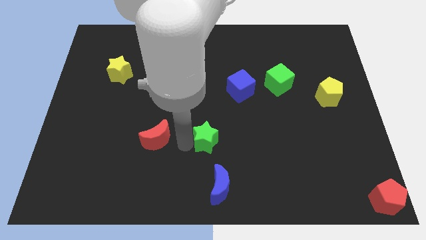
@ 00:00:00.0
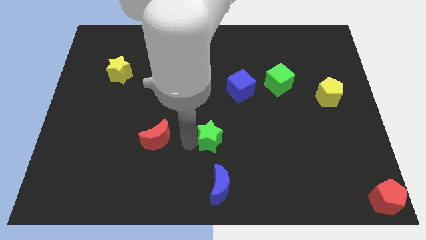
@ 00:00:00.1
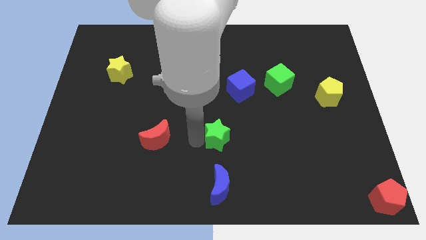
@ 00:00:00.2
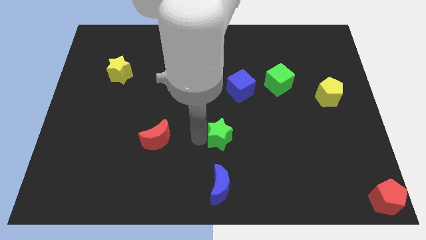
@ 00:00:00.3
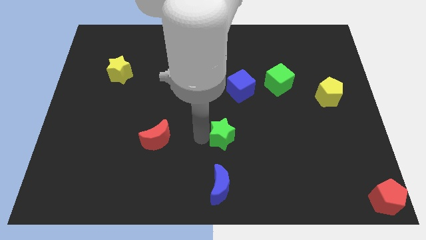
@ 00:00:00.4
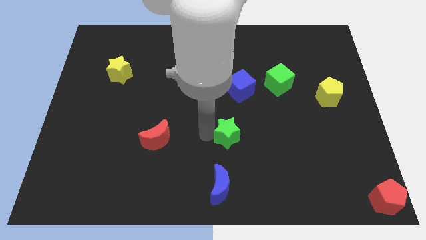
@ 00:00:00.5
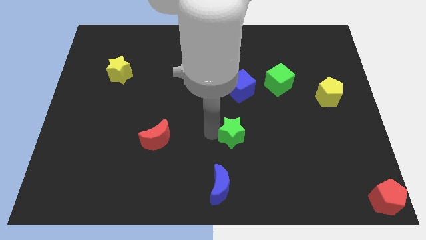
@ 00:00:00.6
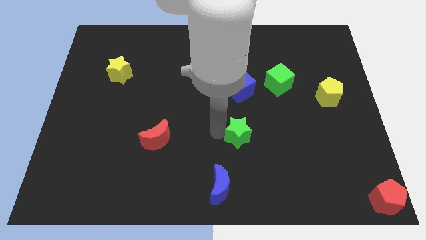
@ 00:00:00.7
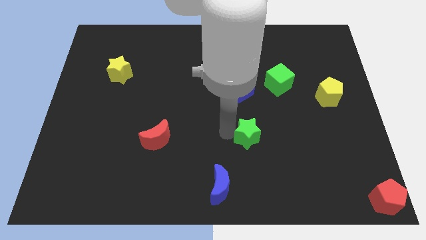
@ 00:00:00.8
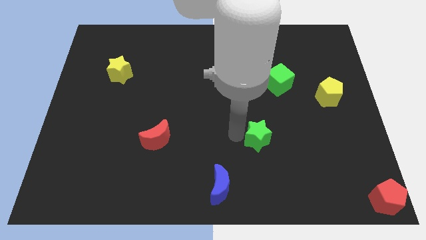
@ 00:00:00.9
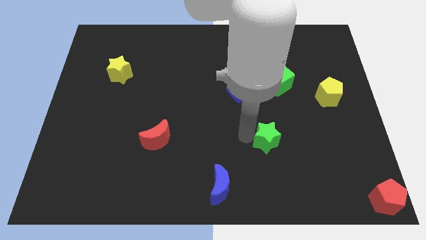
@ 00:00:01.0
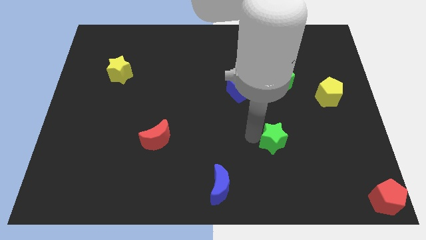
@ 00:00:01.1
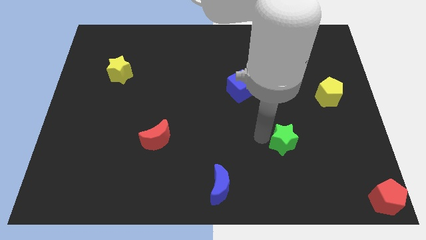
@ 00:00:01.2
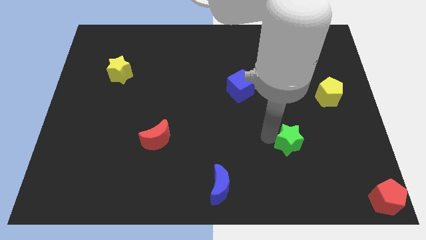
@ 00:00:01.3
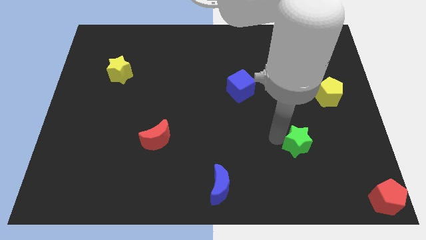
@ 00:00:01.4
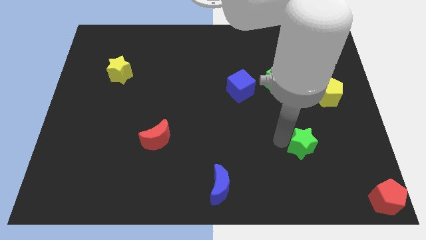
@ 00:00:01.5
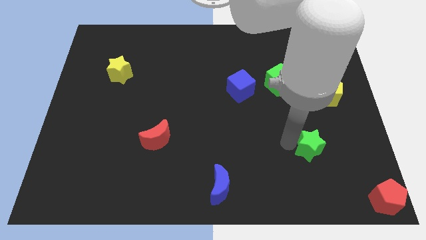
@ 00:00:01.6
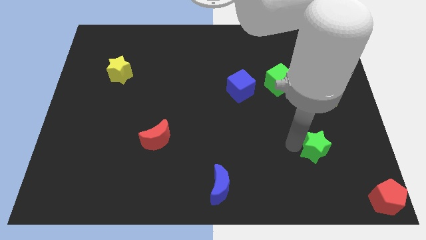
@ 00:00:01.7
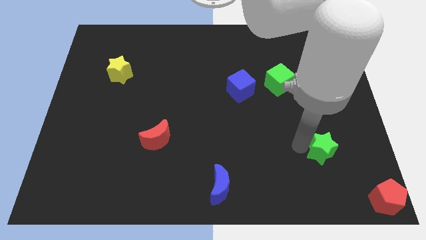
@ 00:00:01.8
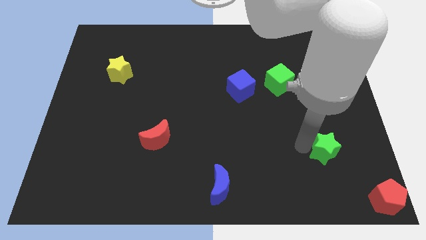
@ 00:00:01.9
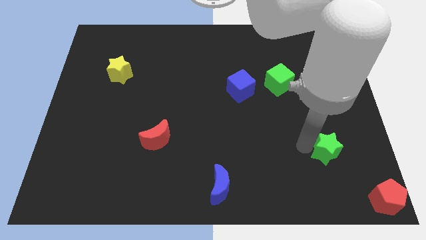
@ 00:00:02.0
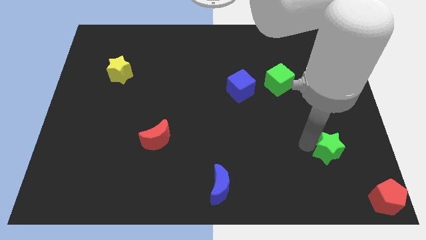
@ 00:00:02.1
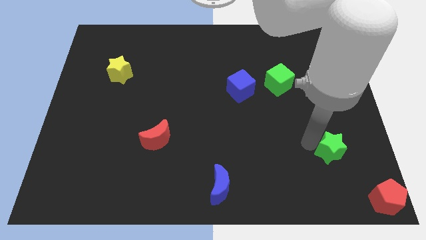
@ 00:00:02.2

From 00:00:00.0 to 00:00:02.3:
move the green star diagonal above red pentagon

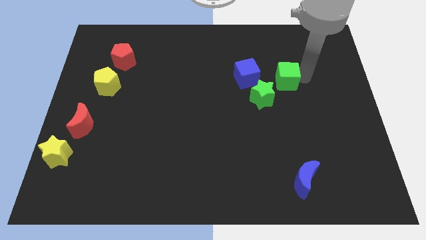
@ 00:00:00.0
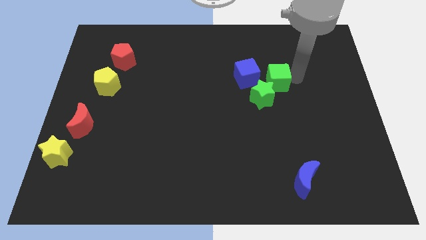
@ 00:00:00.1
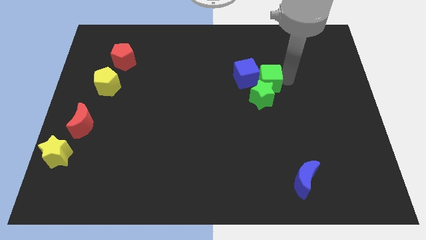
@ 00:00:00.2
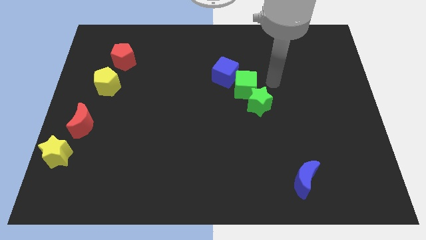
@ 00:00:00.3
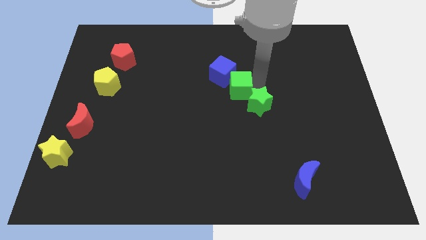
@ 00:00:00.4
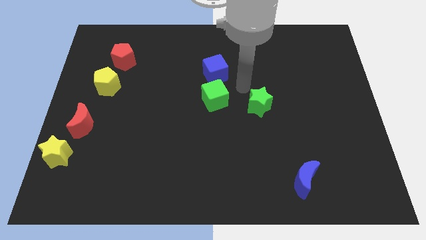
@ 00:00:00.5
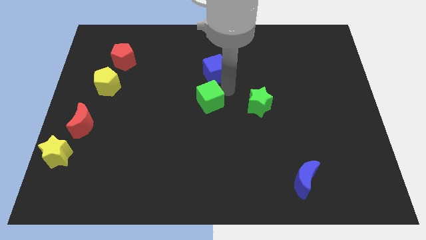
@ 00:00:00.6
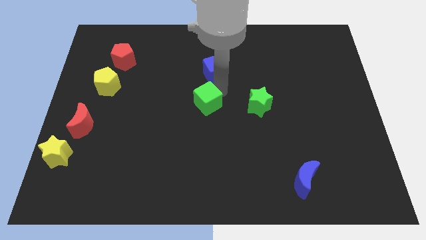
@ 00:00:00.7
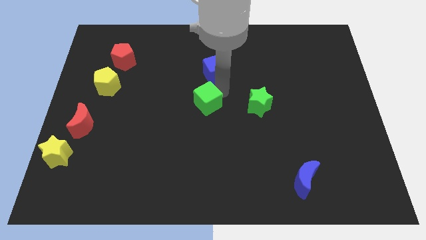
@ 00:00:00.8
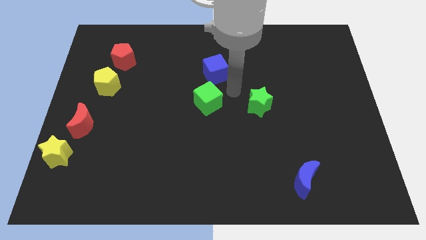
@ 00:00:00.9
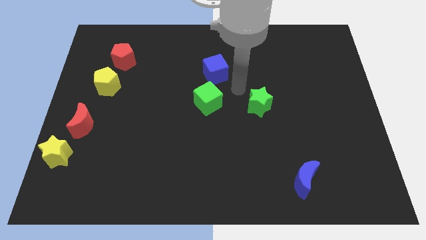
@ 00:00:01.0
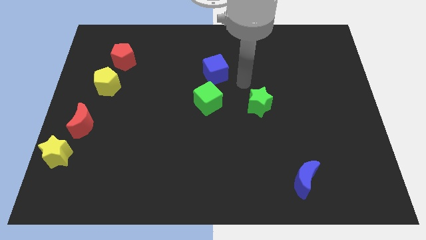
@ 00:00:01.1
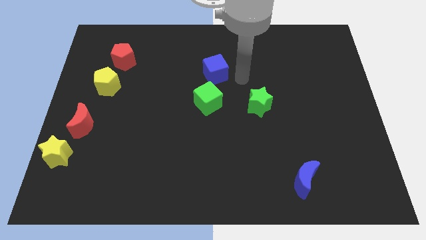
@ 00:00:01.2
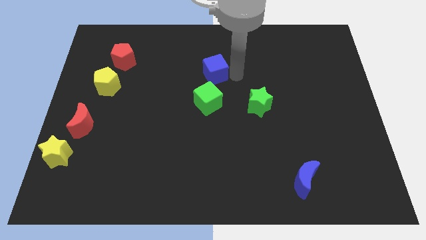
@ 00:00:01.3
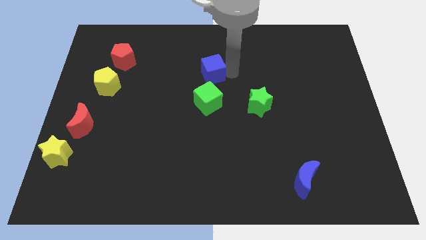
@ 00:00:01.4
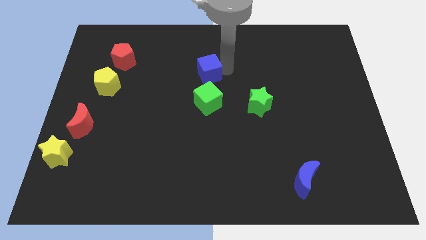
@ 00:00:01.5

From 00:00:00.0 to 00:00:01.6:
put the green cube and blue cube vertically at the center of the table

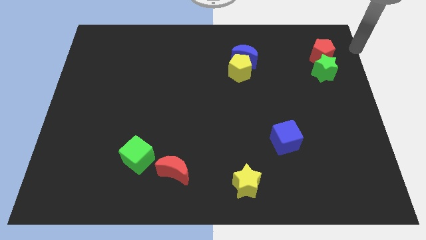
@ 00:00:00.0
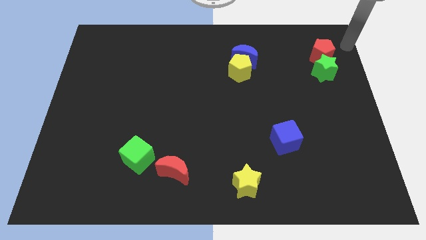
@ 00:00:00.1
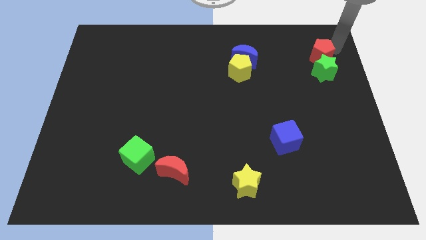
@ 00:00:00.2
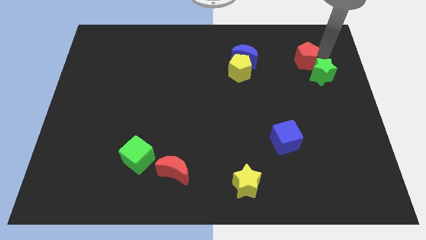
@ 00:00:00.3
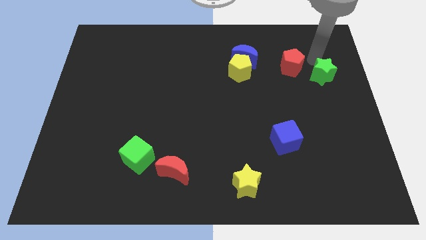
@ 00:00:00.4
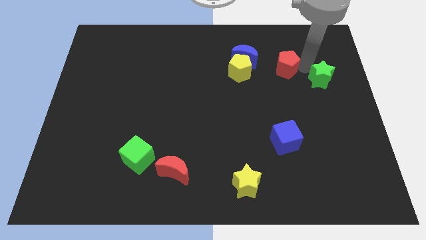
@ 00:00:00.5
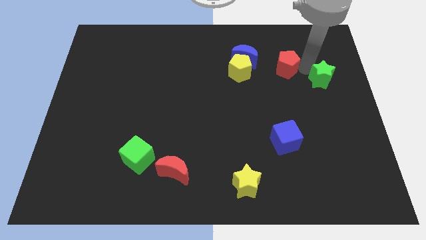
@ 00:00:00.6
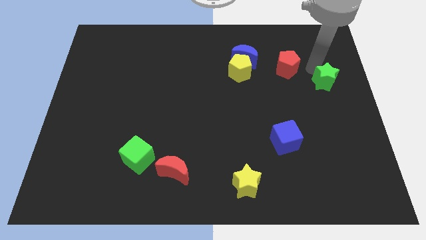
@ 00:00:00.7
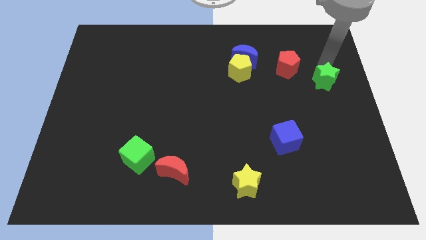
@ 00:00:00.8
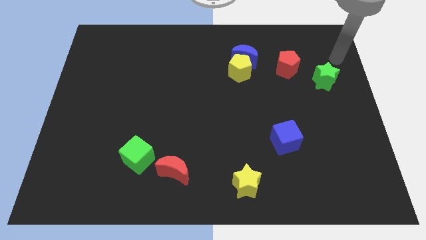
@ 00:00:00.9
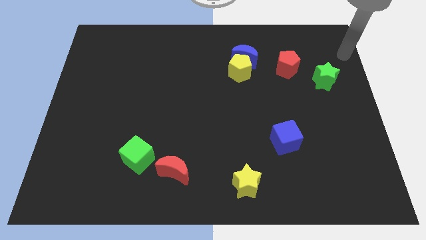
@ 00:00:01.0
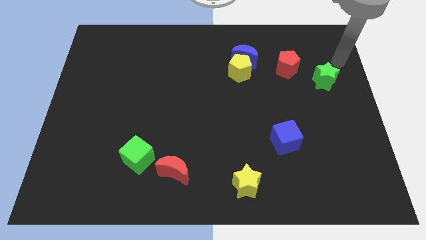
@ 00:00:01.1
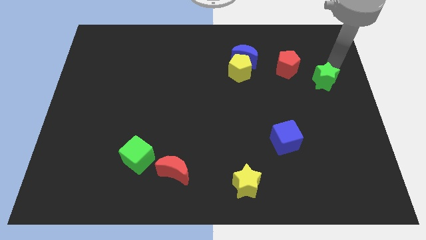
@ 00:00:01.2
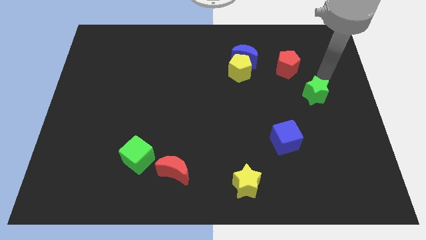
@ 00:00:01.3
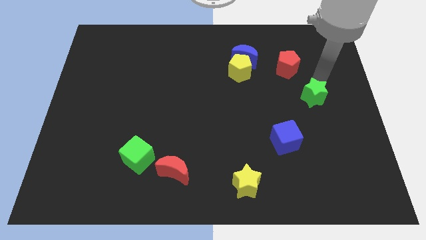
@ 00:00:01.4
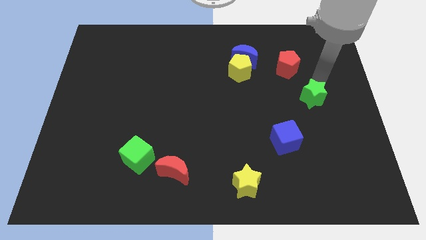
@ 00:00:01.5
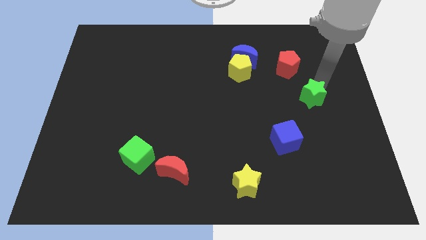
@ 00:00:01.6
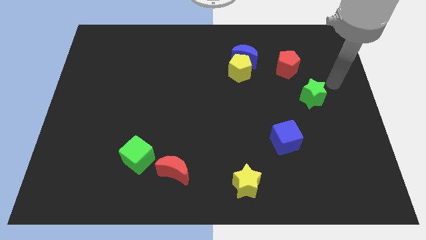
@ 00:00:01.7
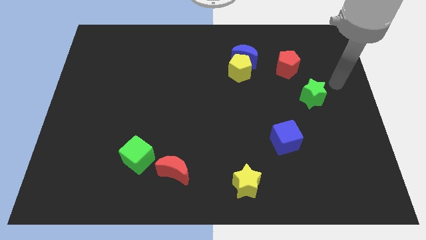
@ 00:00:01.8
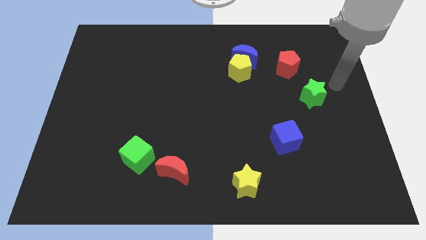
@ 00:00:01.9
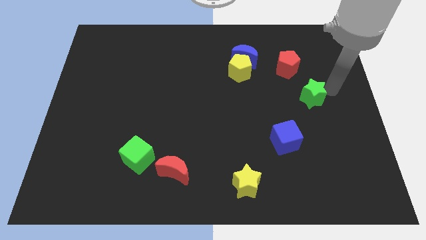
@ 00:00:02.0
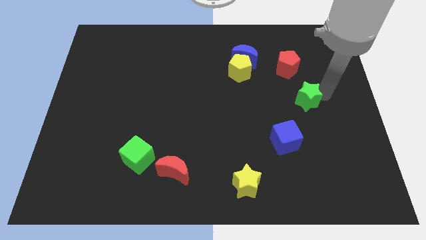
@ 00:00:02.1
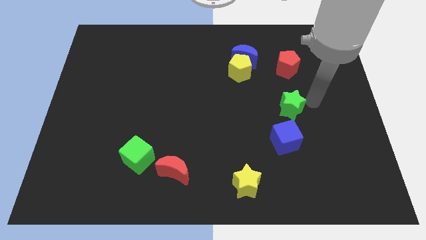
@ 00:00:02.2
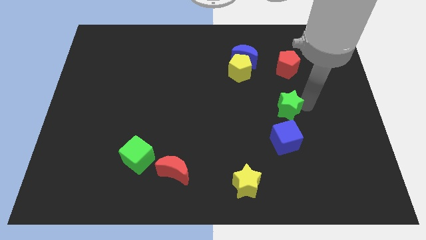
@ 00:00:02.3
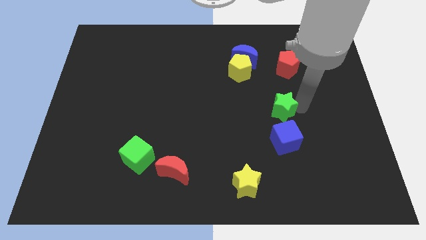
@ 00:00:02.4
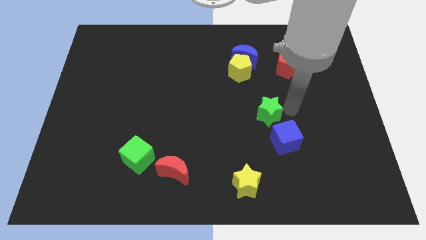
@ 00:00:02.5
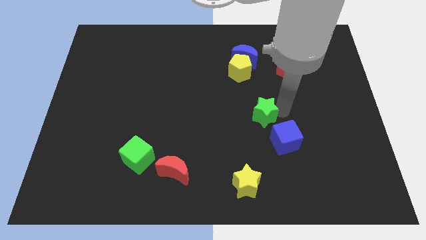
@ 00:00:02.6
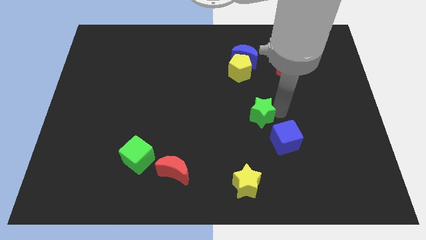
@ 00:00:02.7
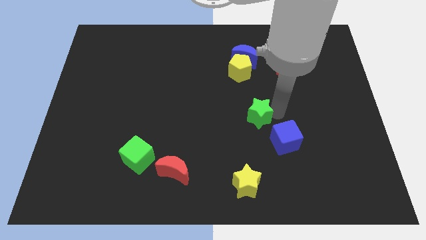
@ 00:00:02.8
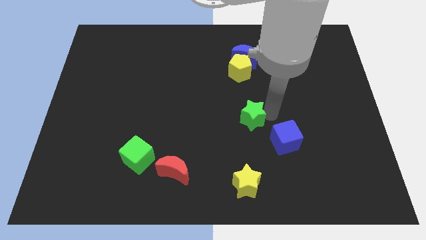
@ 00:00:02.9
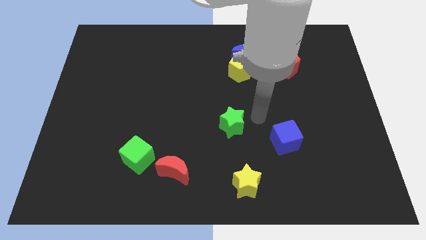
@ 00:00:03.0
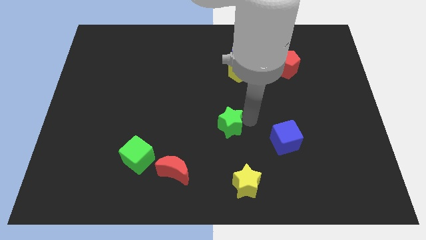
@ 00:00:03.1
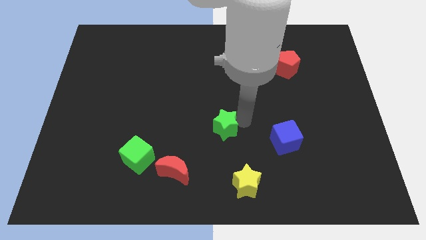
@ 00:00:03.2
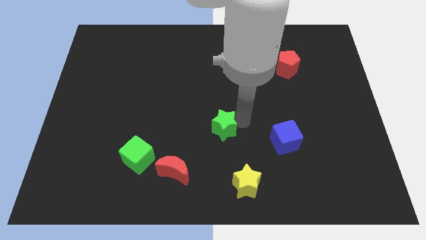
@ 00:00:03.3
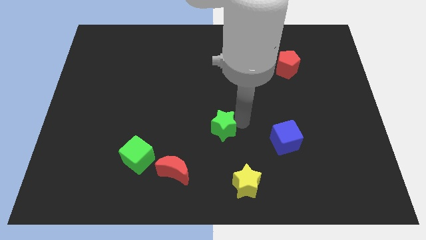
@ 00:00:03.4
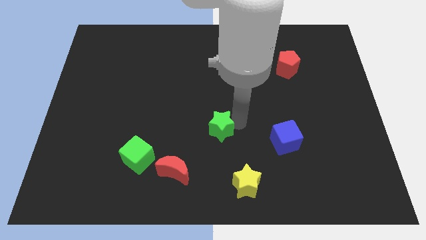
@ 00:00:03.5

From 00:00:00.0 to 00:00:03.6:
move the green star to the left of the blue cube

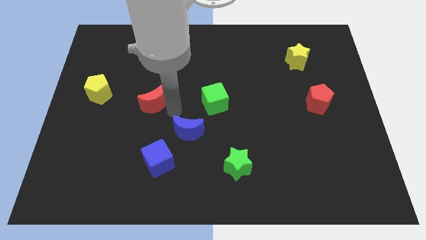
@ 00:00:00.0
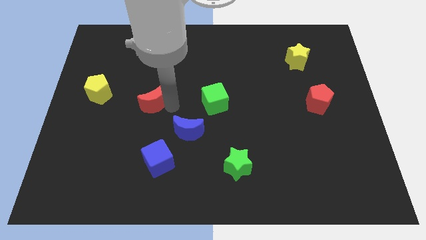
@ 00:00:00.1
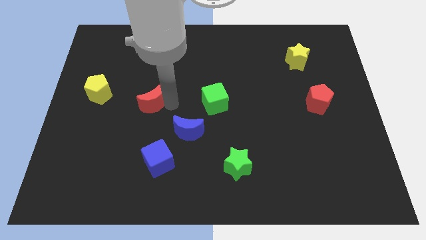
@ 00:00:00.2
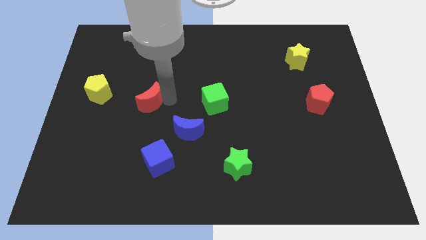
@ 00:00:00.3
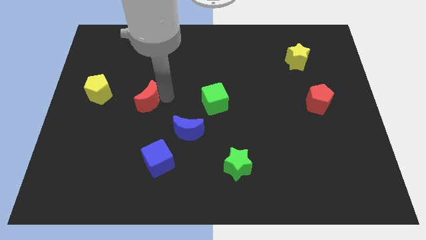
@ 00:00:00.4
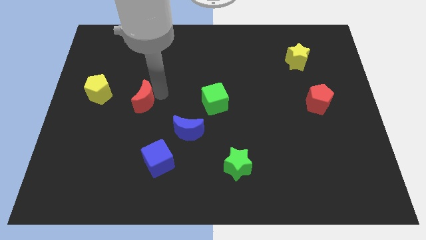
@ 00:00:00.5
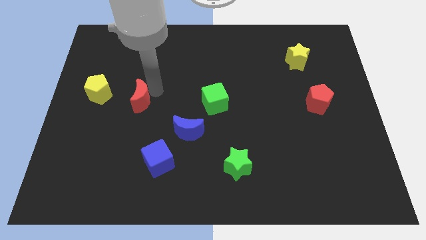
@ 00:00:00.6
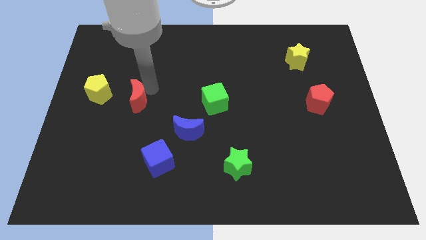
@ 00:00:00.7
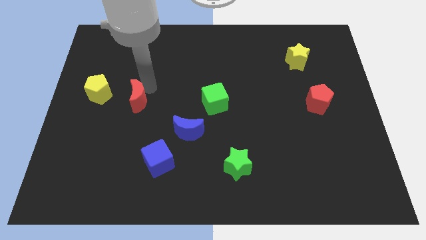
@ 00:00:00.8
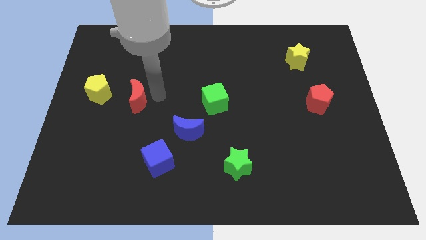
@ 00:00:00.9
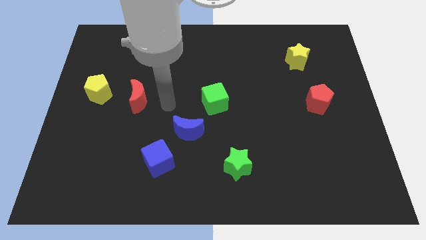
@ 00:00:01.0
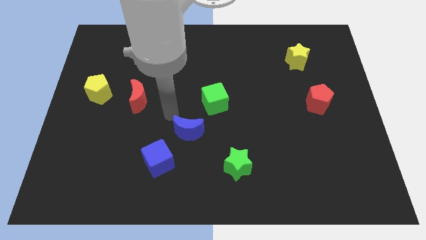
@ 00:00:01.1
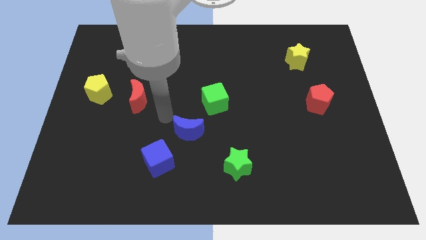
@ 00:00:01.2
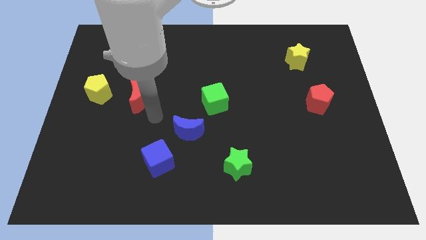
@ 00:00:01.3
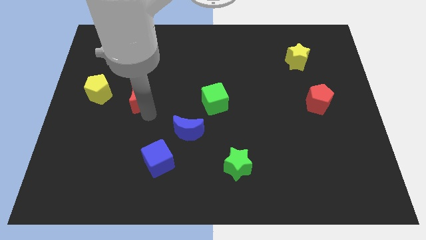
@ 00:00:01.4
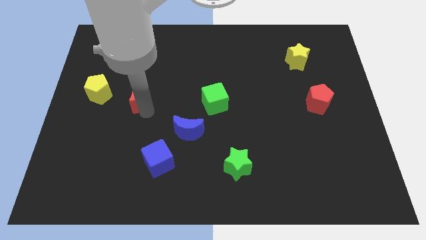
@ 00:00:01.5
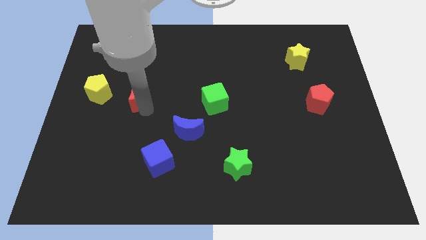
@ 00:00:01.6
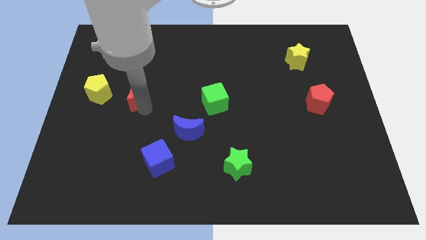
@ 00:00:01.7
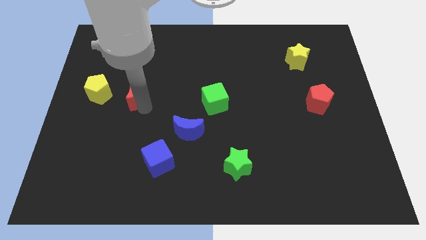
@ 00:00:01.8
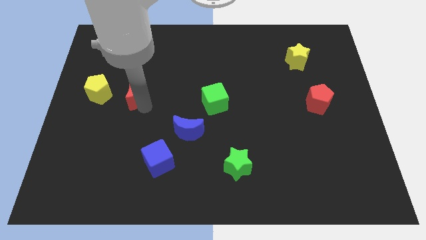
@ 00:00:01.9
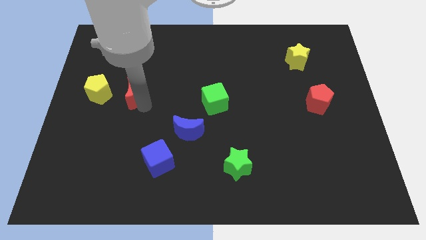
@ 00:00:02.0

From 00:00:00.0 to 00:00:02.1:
place red crescent a bit far to the right of yellow pentagon
